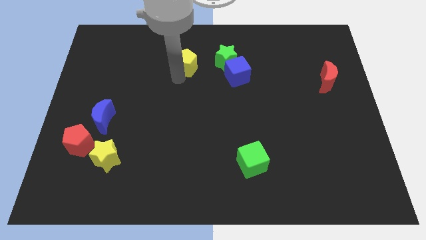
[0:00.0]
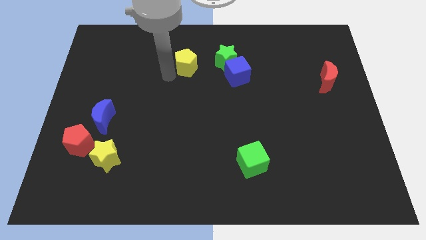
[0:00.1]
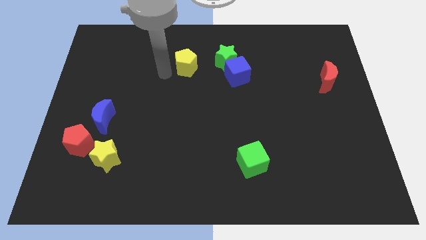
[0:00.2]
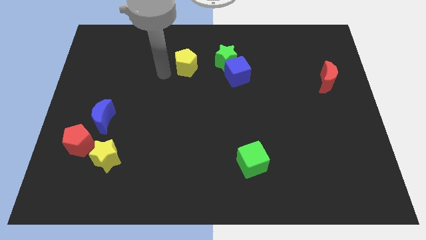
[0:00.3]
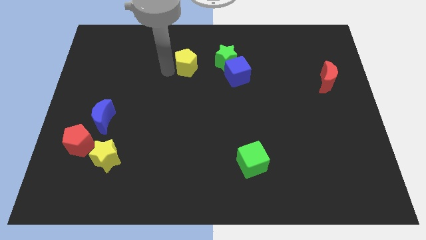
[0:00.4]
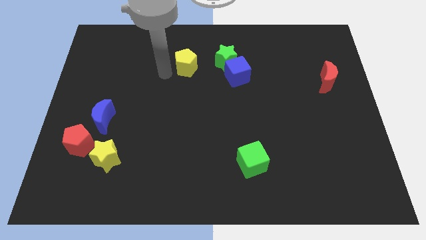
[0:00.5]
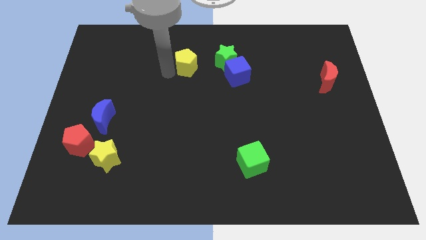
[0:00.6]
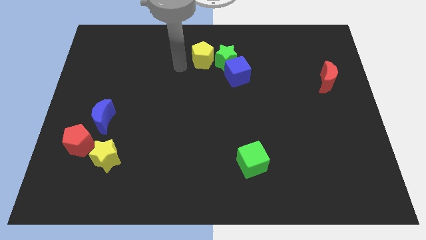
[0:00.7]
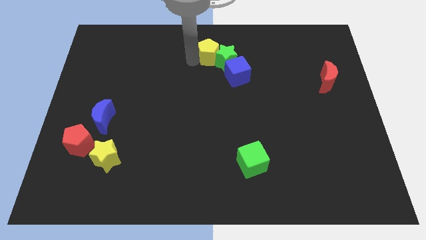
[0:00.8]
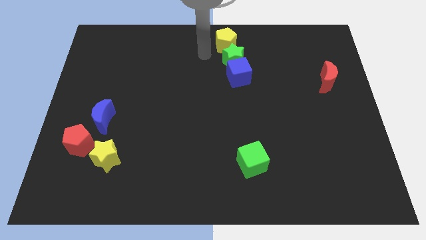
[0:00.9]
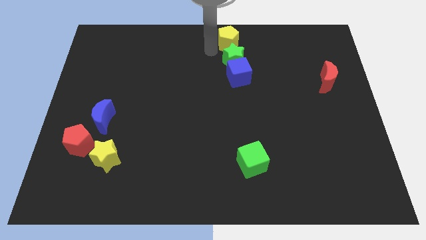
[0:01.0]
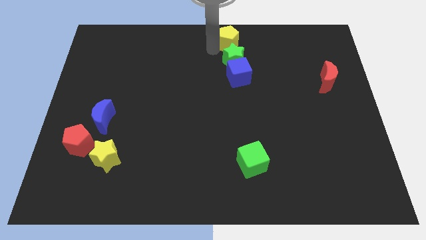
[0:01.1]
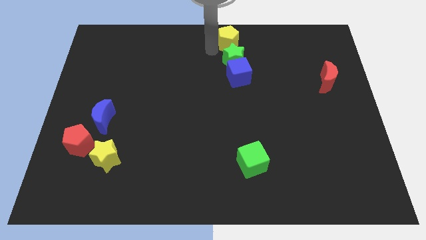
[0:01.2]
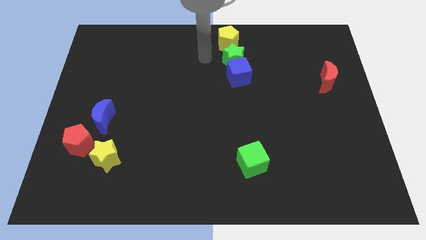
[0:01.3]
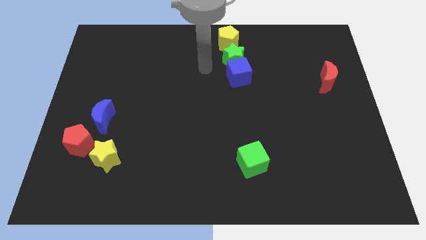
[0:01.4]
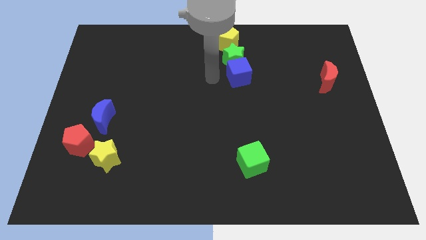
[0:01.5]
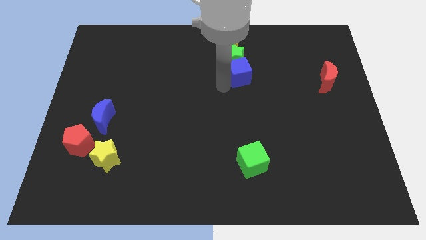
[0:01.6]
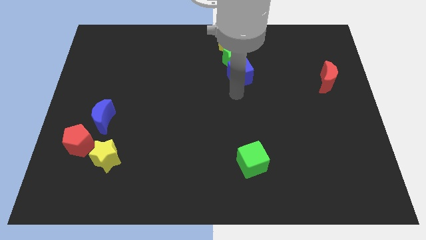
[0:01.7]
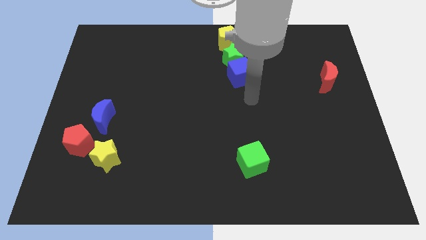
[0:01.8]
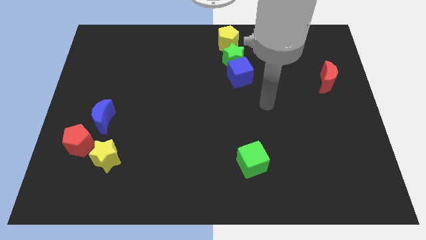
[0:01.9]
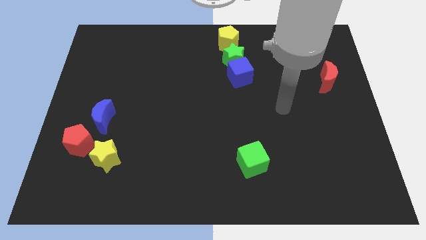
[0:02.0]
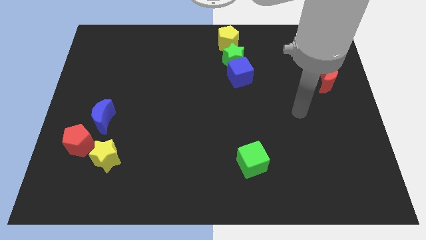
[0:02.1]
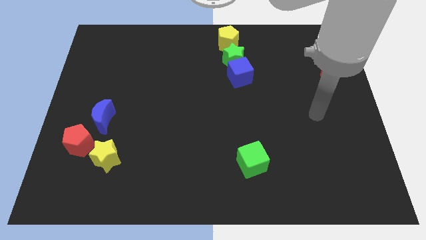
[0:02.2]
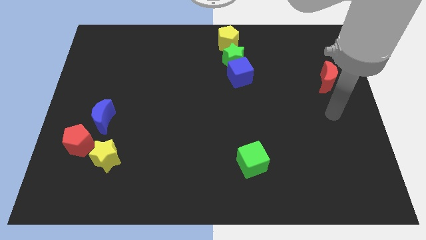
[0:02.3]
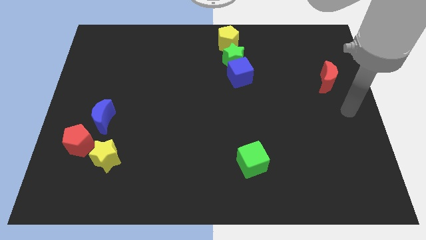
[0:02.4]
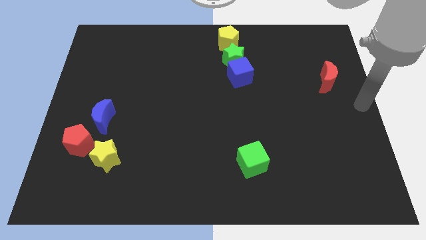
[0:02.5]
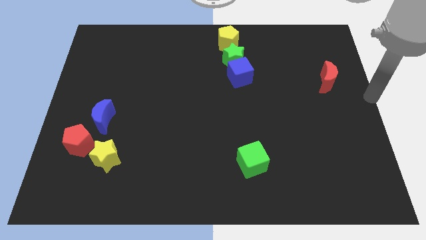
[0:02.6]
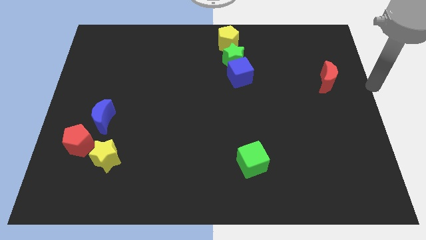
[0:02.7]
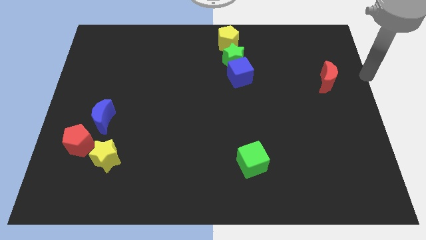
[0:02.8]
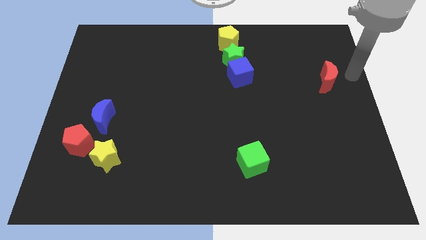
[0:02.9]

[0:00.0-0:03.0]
place the yellow pentagon above the green star

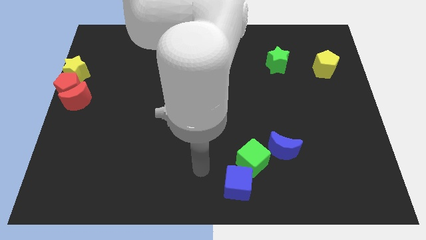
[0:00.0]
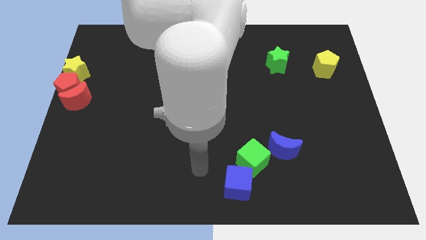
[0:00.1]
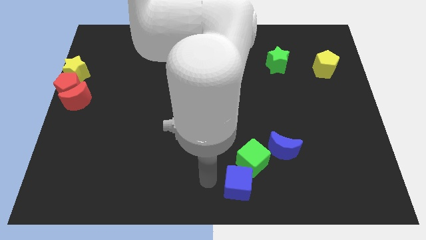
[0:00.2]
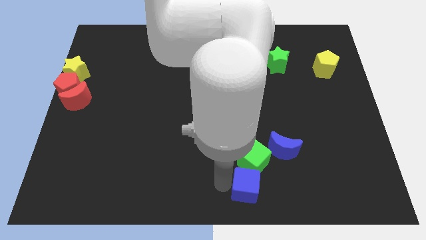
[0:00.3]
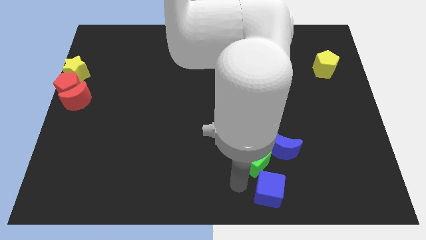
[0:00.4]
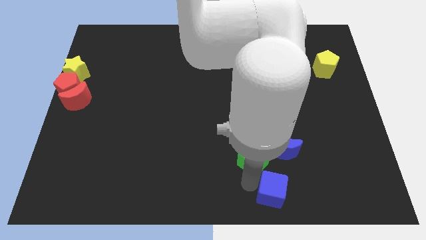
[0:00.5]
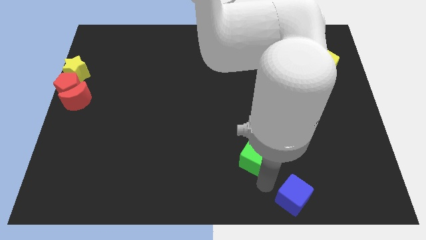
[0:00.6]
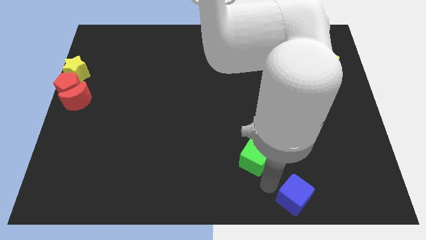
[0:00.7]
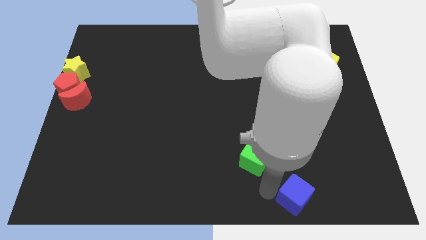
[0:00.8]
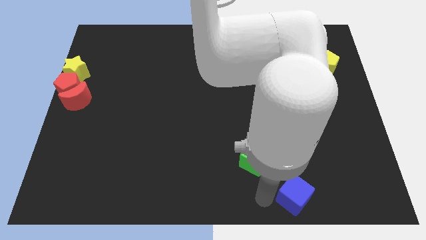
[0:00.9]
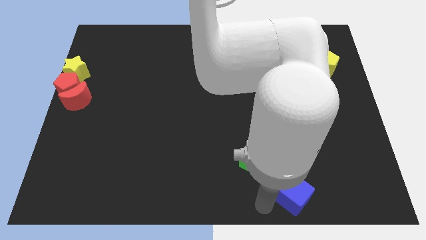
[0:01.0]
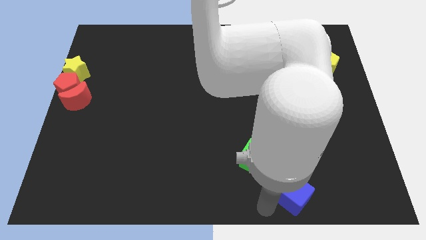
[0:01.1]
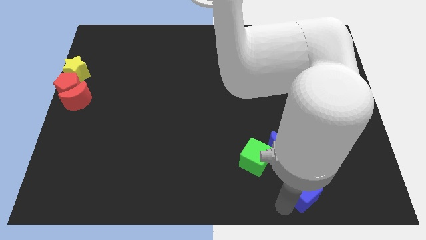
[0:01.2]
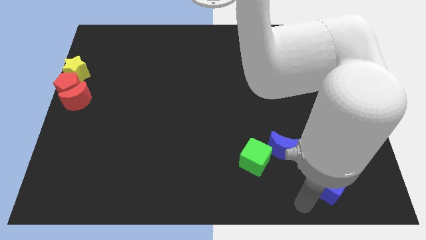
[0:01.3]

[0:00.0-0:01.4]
push the blue cube away from the green cube

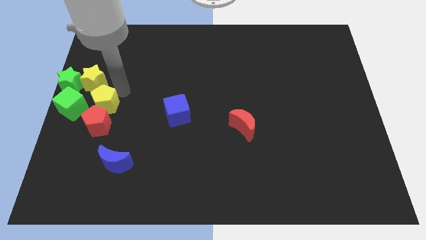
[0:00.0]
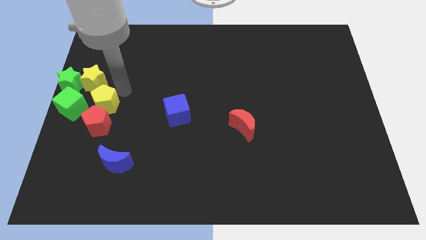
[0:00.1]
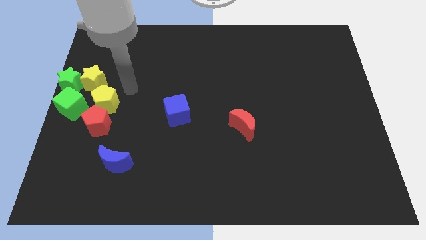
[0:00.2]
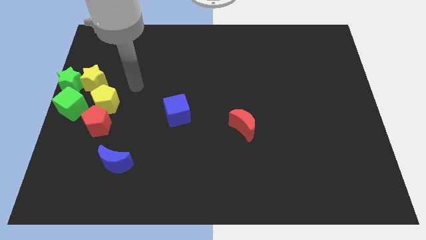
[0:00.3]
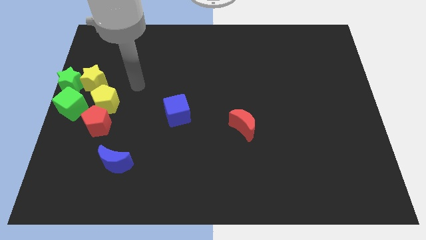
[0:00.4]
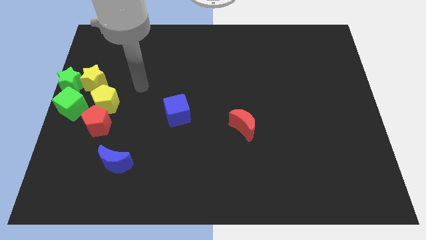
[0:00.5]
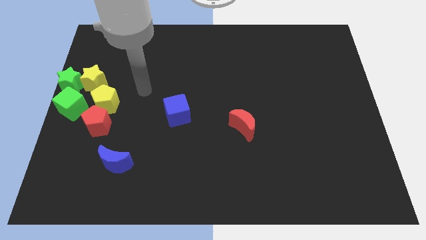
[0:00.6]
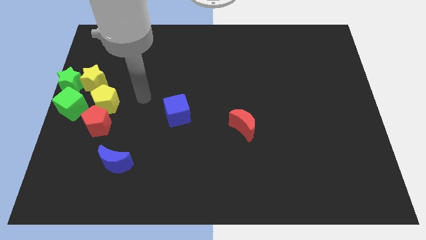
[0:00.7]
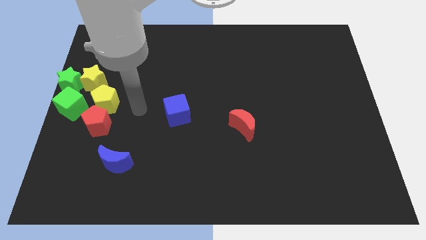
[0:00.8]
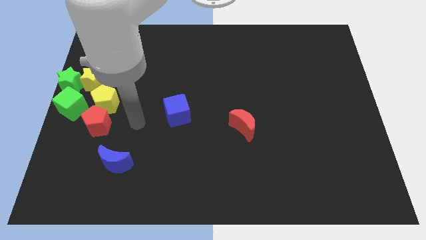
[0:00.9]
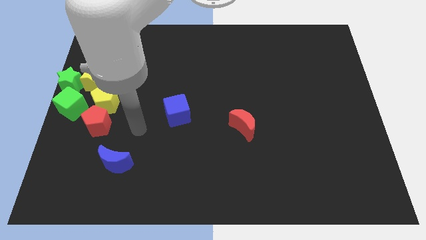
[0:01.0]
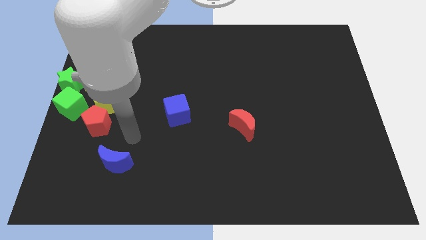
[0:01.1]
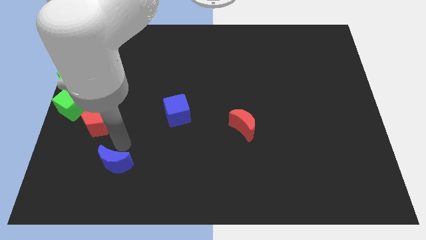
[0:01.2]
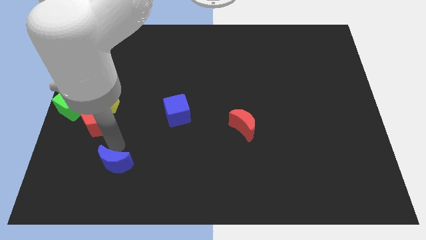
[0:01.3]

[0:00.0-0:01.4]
place your arm above the blue moon

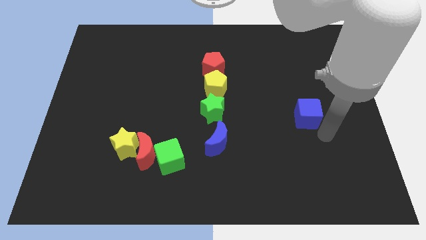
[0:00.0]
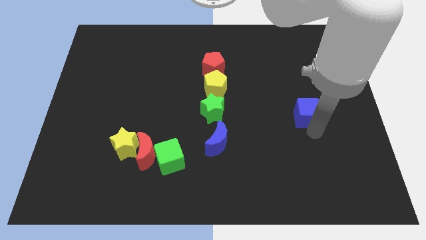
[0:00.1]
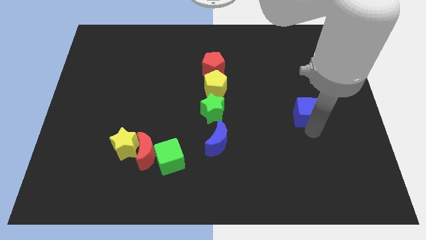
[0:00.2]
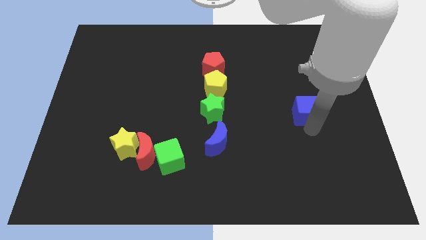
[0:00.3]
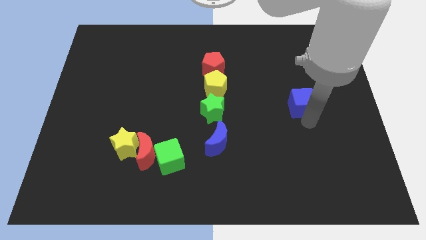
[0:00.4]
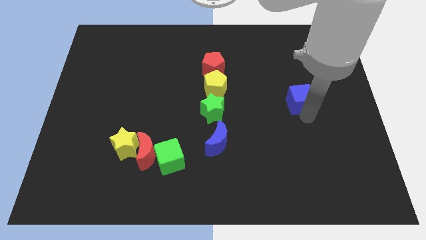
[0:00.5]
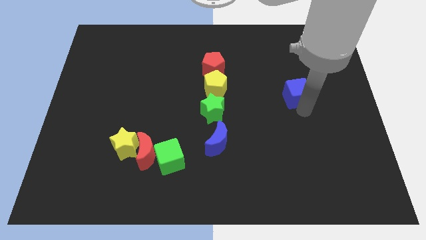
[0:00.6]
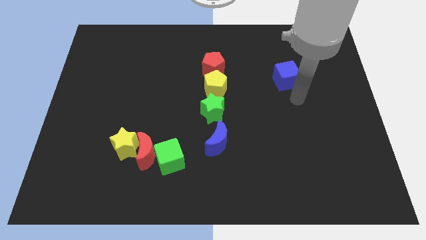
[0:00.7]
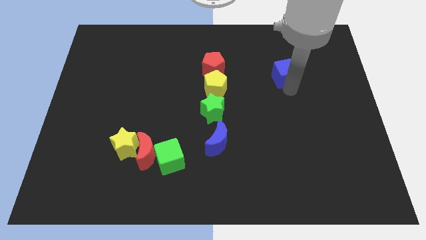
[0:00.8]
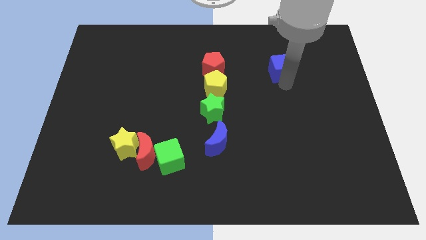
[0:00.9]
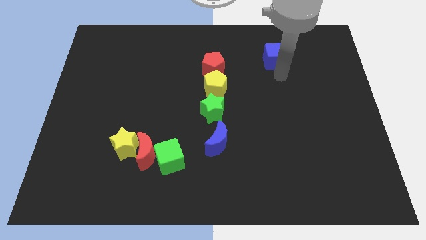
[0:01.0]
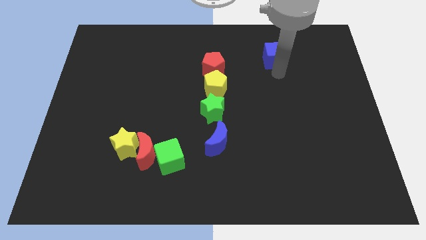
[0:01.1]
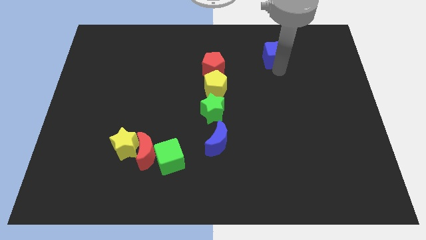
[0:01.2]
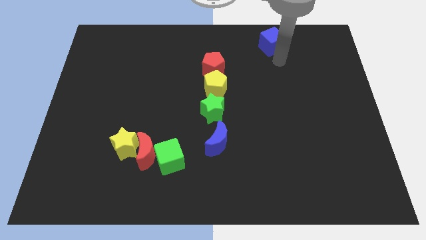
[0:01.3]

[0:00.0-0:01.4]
move the blue cube diagonally top right to the red pentagon

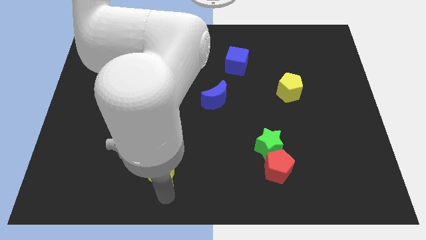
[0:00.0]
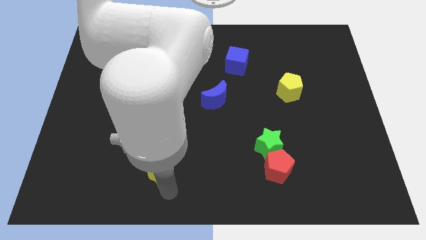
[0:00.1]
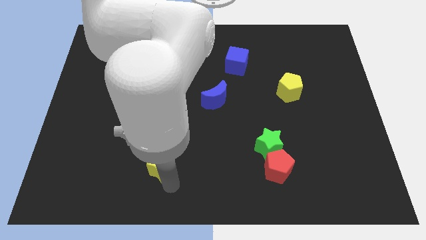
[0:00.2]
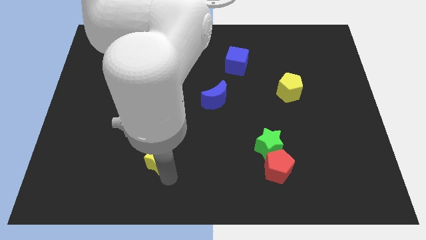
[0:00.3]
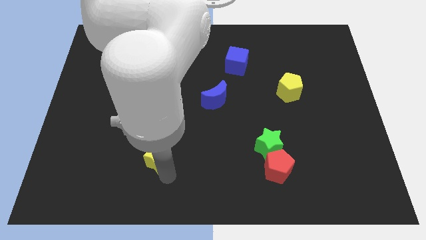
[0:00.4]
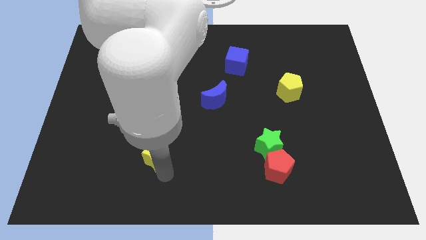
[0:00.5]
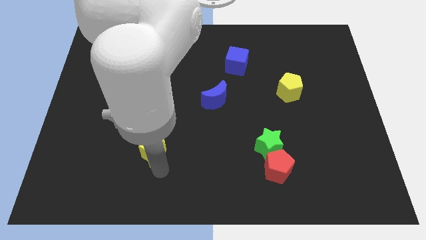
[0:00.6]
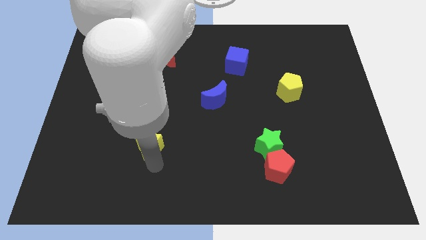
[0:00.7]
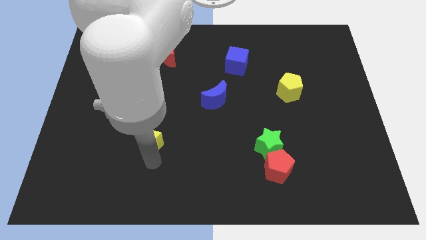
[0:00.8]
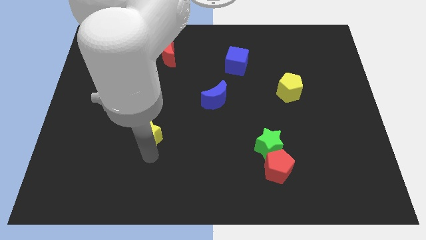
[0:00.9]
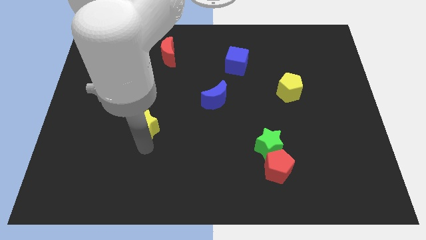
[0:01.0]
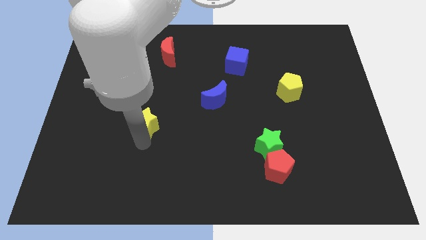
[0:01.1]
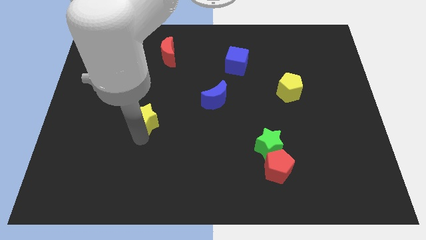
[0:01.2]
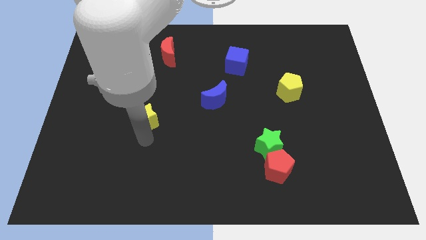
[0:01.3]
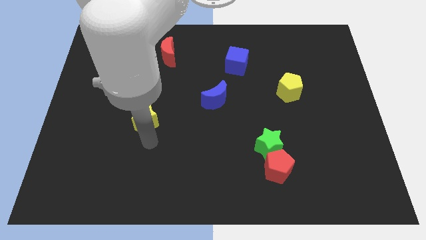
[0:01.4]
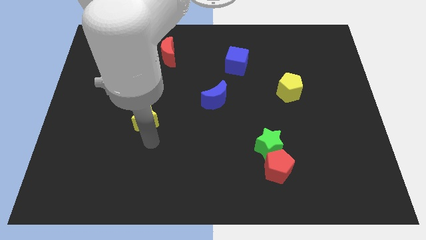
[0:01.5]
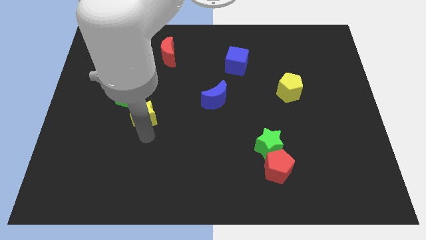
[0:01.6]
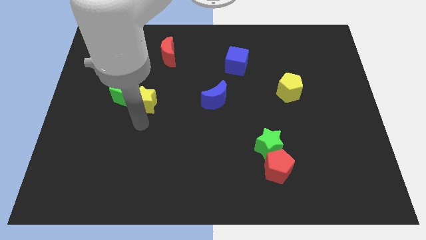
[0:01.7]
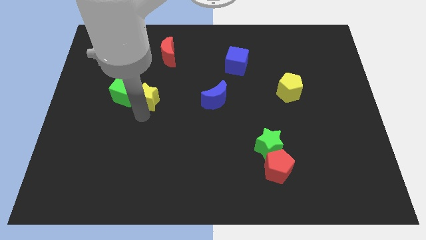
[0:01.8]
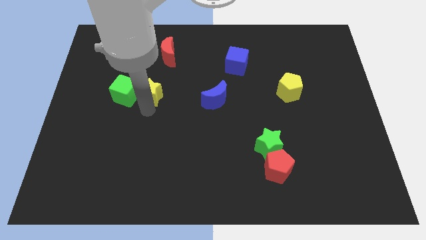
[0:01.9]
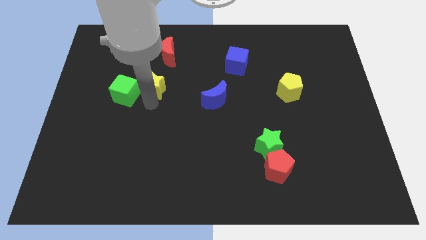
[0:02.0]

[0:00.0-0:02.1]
move the yellow star right to the green cube
